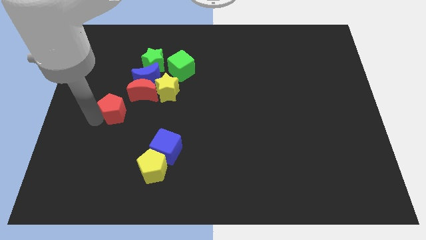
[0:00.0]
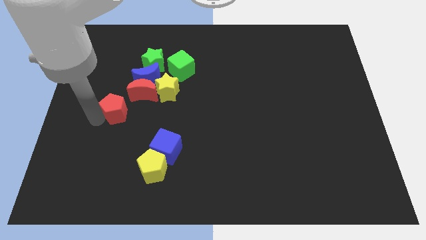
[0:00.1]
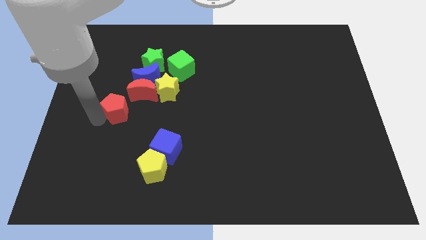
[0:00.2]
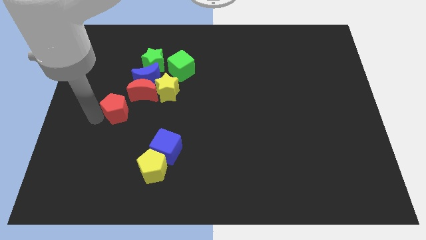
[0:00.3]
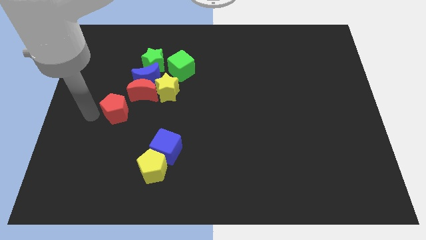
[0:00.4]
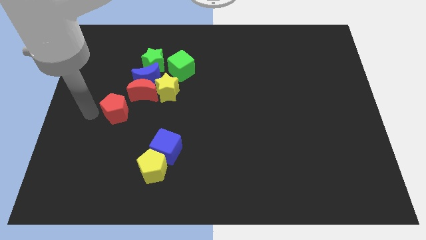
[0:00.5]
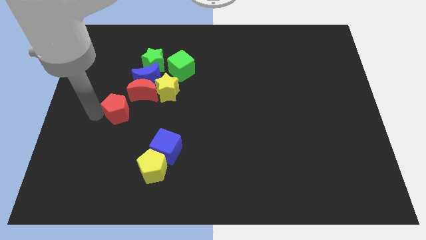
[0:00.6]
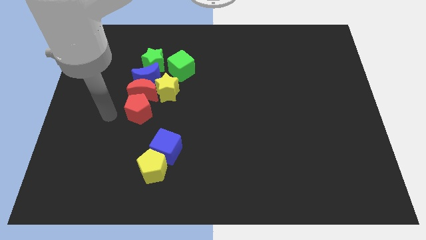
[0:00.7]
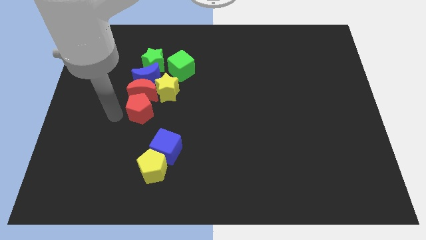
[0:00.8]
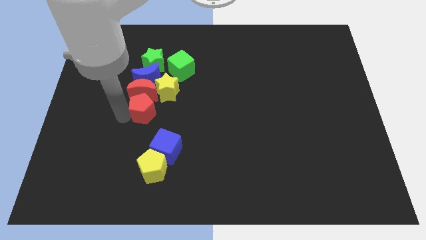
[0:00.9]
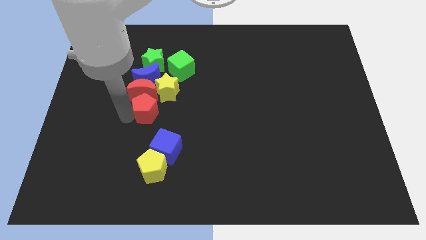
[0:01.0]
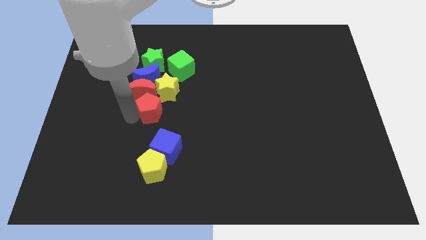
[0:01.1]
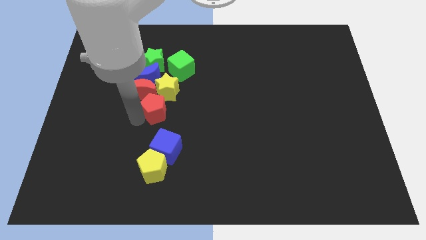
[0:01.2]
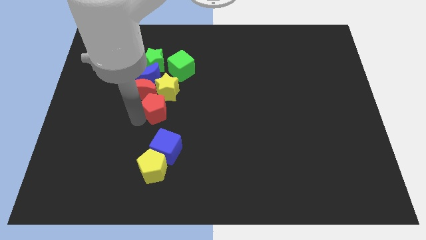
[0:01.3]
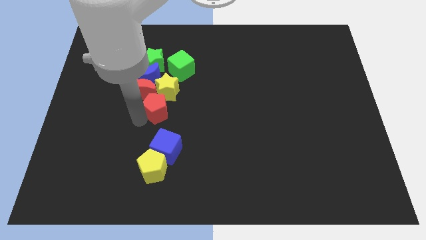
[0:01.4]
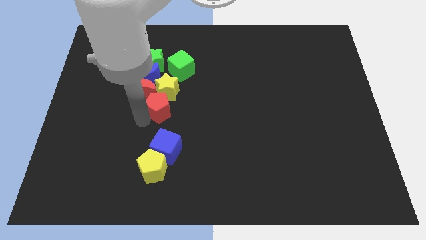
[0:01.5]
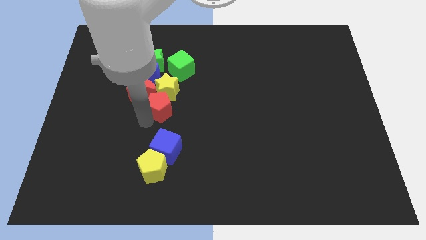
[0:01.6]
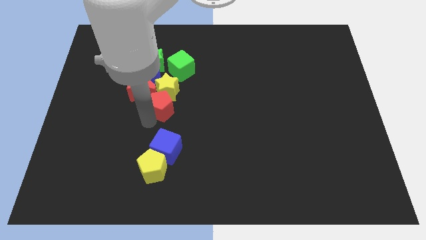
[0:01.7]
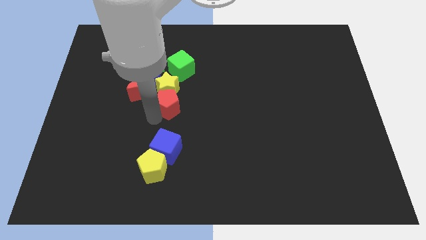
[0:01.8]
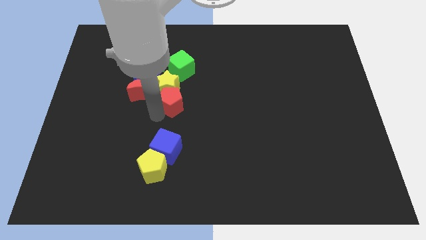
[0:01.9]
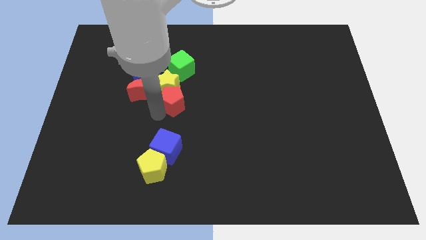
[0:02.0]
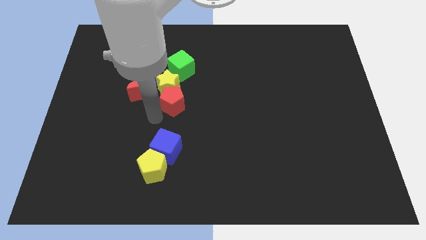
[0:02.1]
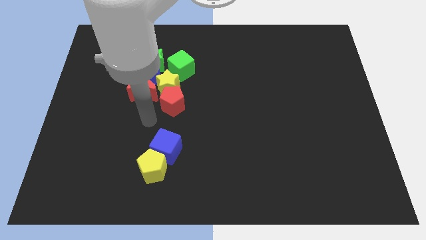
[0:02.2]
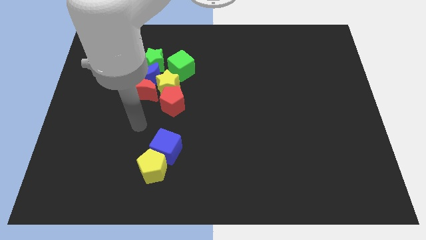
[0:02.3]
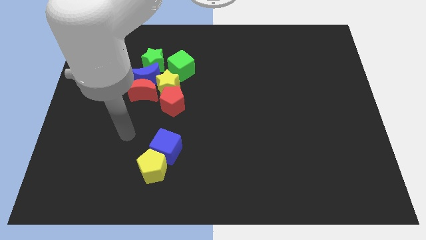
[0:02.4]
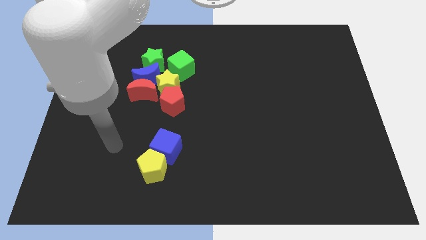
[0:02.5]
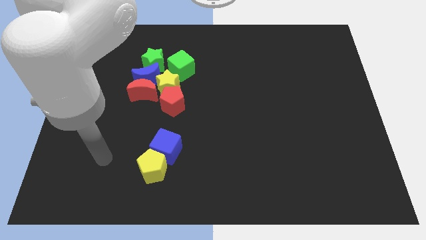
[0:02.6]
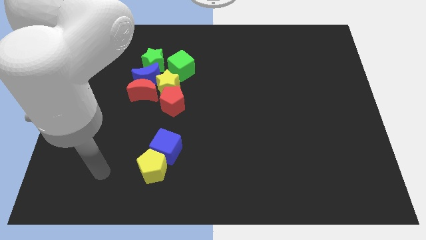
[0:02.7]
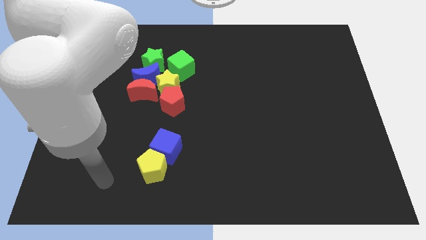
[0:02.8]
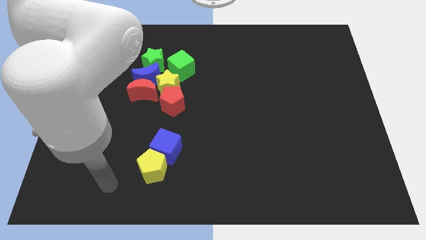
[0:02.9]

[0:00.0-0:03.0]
drag the red pentagon to the right

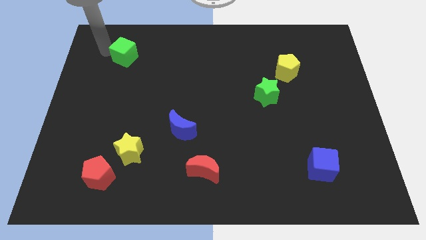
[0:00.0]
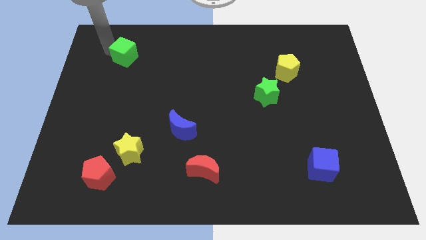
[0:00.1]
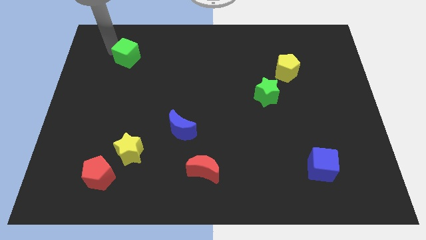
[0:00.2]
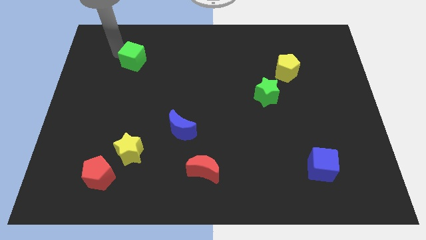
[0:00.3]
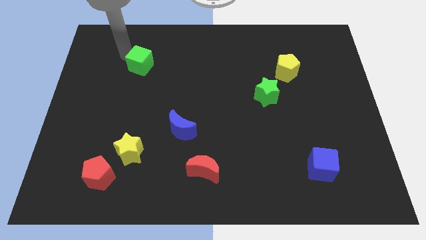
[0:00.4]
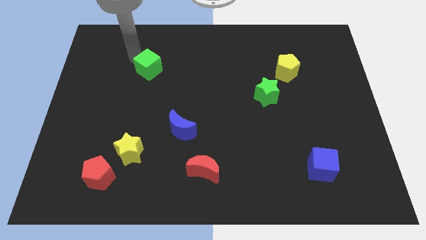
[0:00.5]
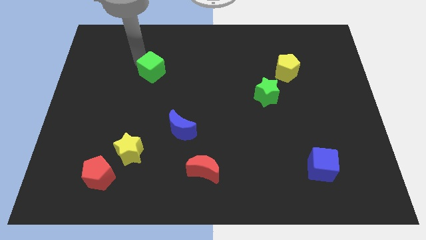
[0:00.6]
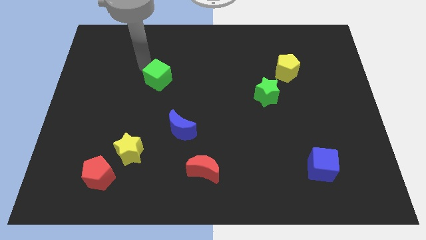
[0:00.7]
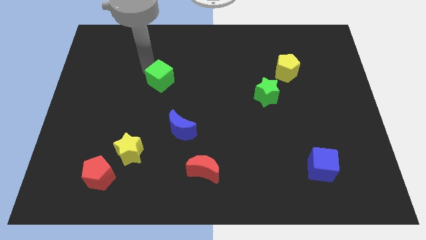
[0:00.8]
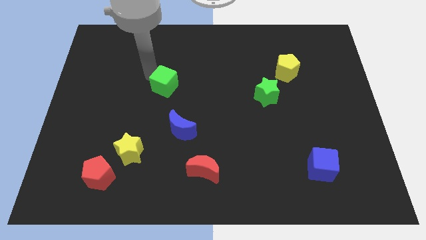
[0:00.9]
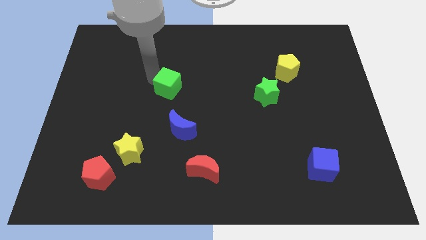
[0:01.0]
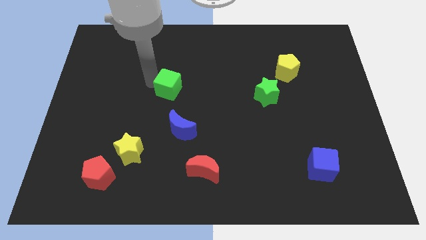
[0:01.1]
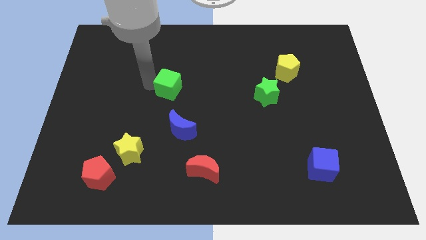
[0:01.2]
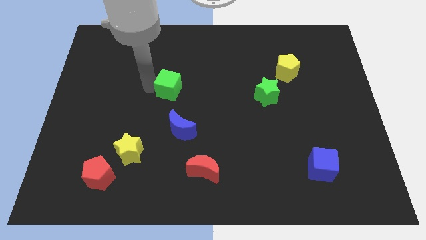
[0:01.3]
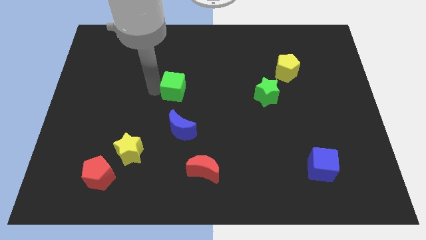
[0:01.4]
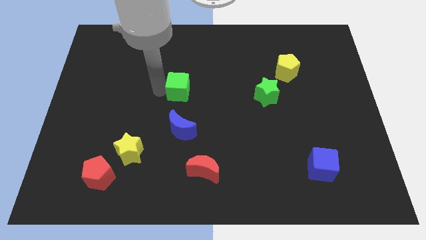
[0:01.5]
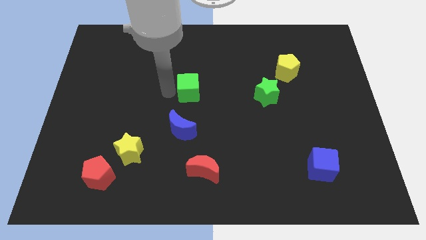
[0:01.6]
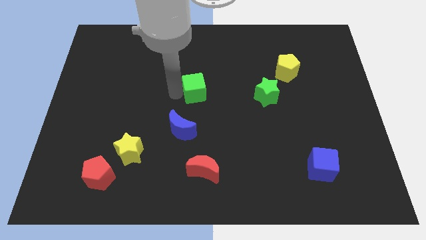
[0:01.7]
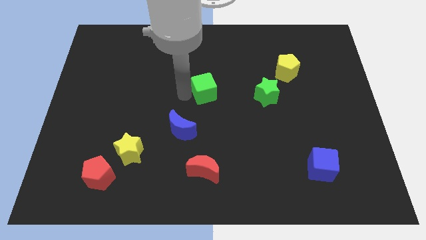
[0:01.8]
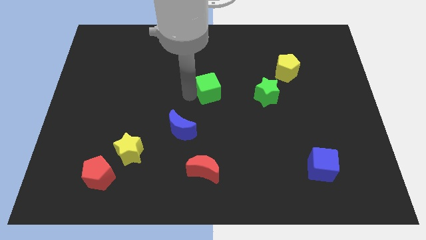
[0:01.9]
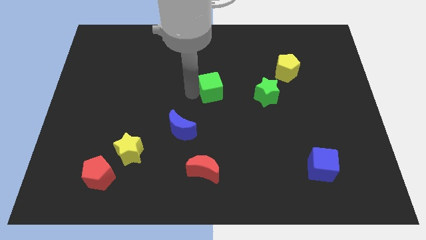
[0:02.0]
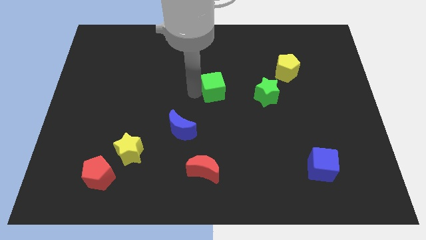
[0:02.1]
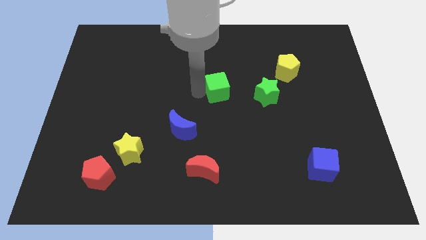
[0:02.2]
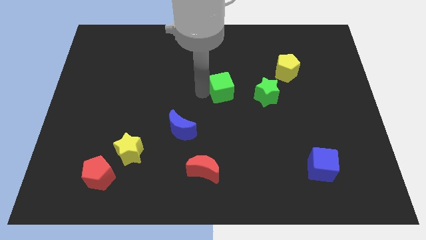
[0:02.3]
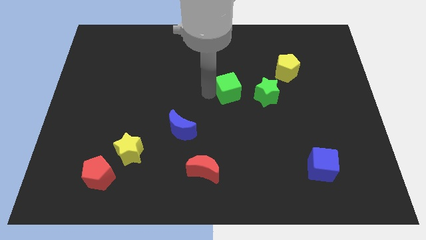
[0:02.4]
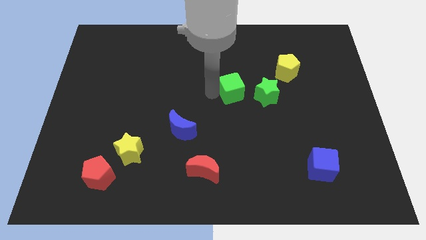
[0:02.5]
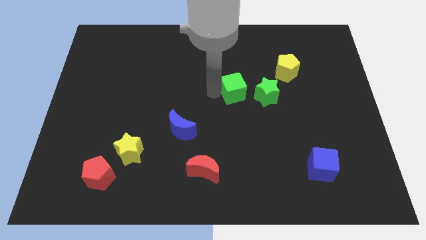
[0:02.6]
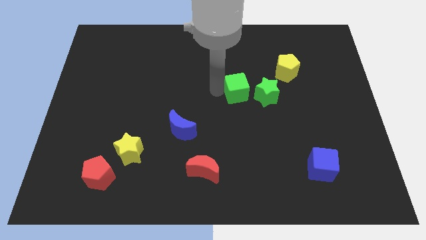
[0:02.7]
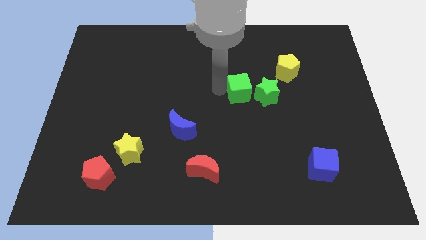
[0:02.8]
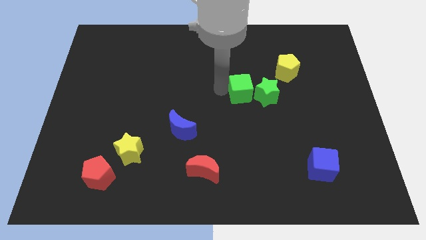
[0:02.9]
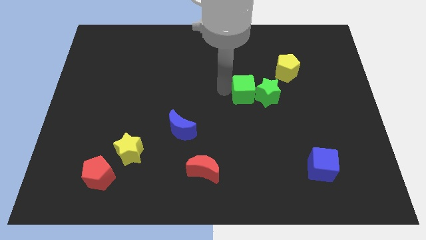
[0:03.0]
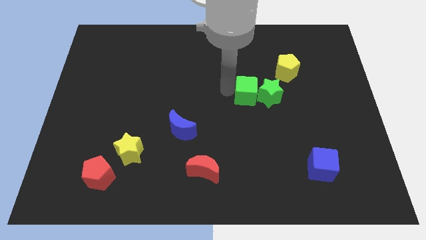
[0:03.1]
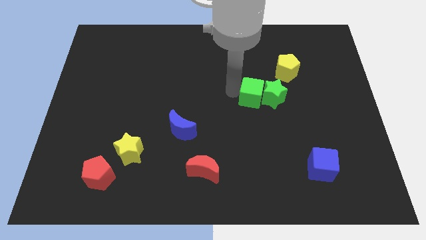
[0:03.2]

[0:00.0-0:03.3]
attach the green cube to the green star

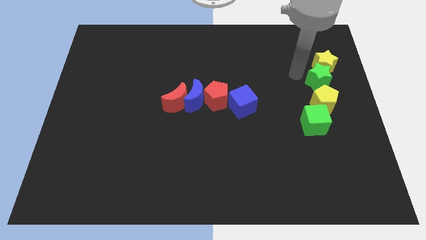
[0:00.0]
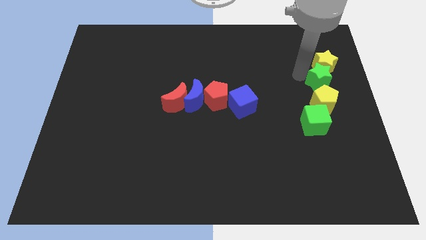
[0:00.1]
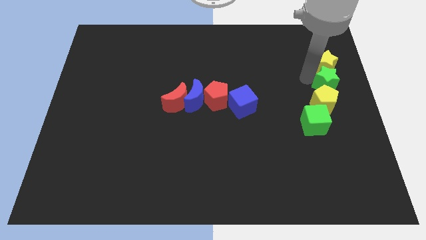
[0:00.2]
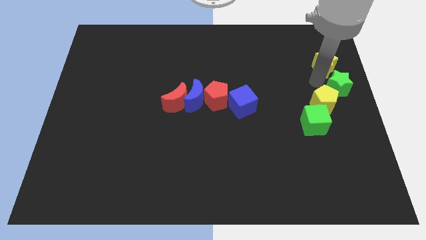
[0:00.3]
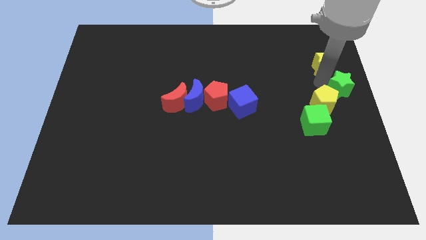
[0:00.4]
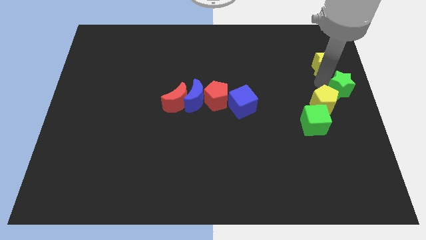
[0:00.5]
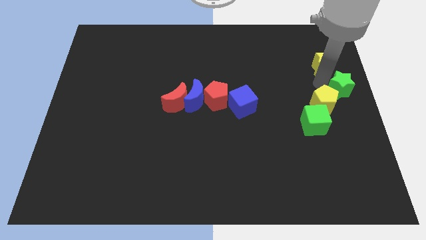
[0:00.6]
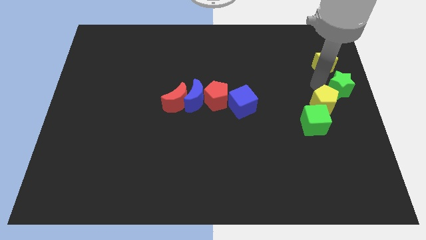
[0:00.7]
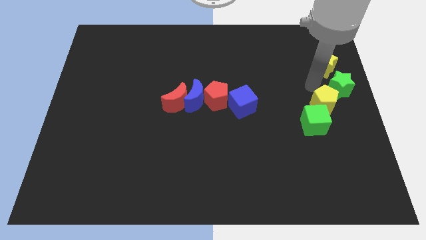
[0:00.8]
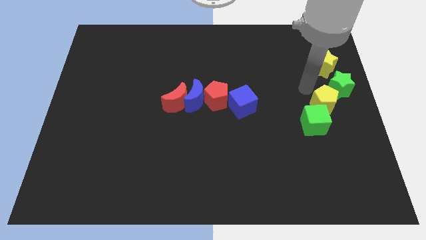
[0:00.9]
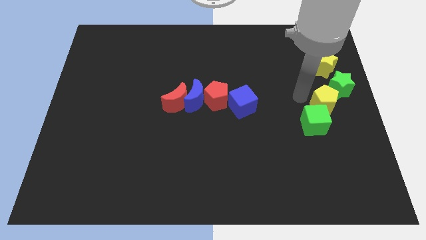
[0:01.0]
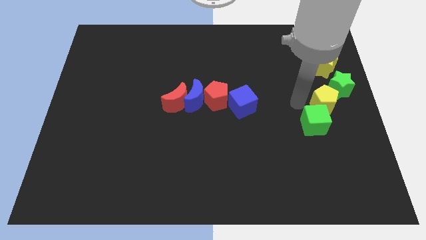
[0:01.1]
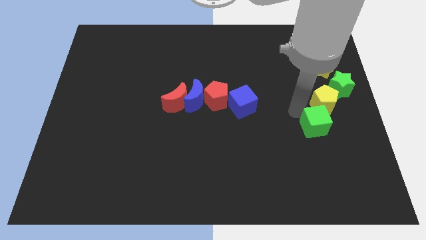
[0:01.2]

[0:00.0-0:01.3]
separate the green star from the yellow star

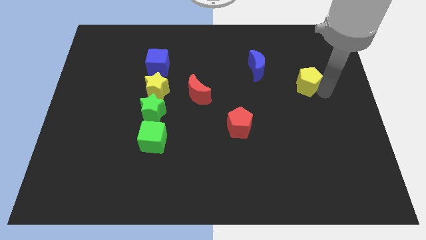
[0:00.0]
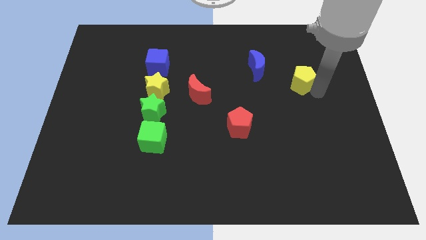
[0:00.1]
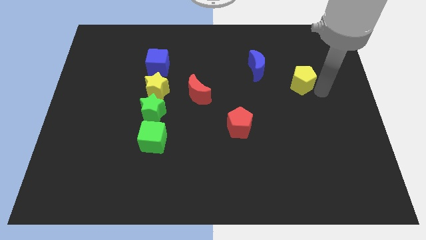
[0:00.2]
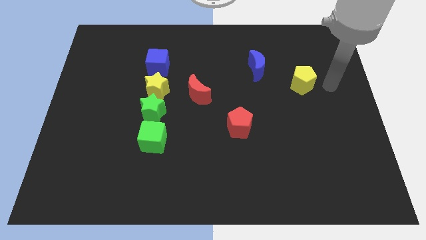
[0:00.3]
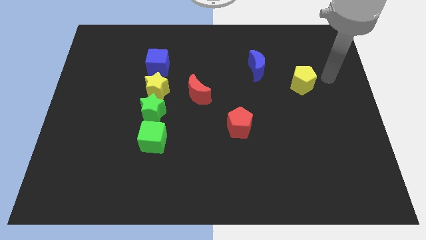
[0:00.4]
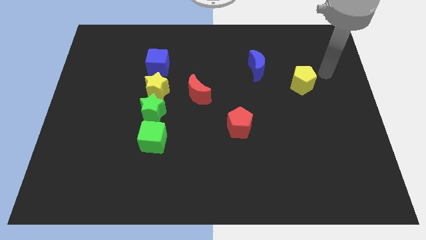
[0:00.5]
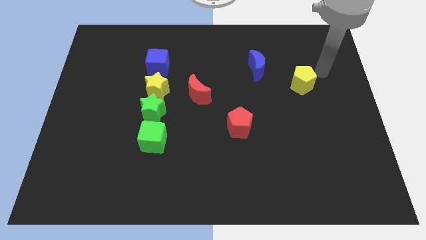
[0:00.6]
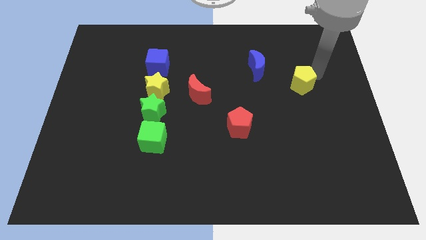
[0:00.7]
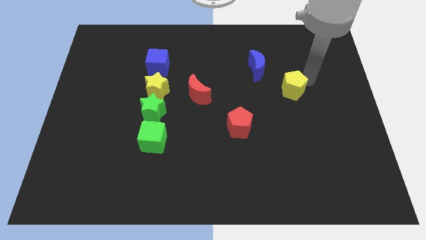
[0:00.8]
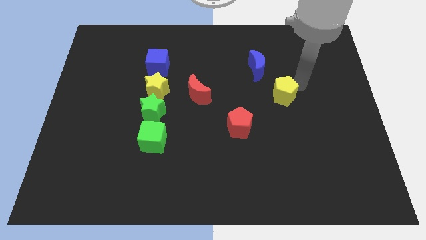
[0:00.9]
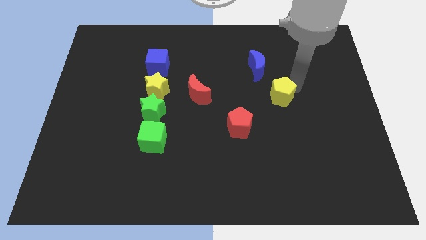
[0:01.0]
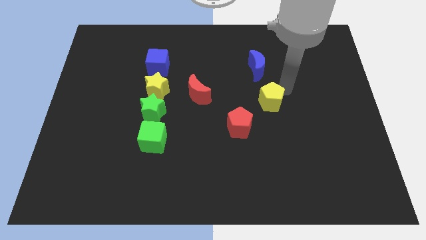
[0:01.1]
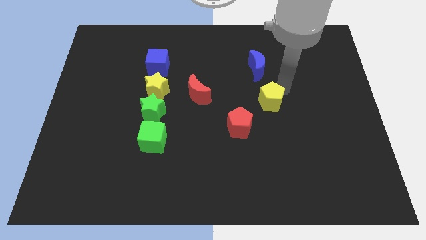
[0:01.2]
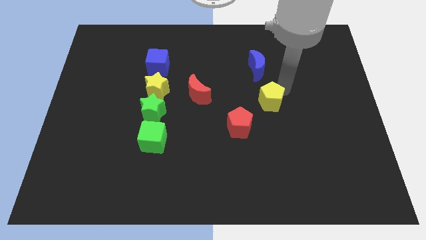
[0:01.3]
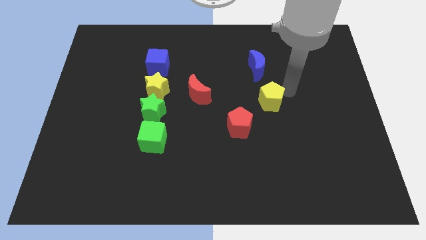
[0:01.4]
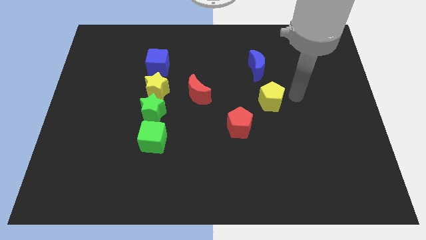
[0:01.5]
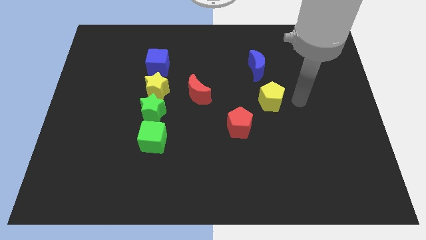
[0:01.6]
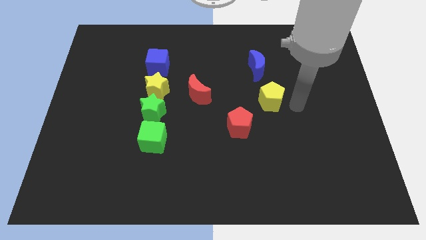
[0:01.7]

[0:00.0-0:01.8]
push the yellow pentagon close to the red pentagon
